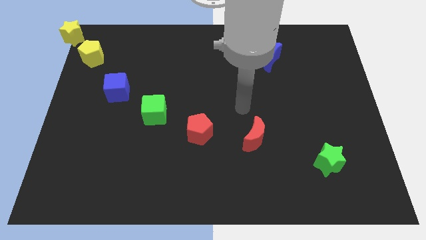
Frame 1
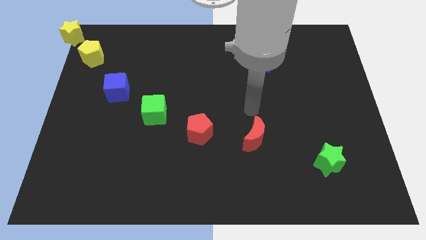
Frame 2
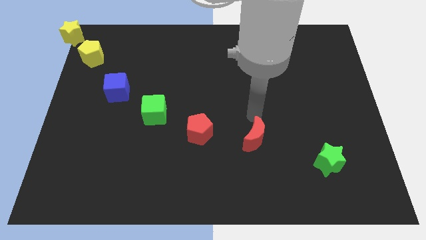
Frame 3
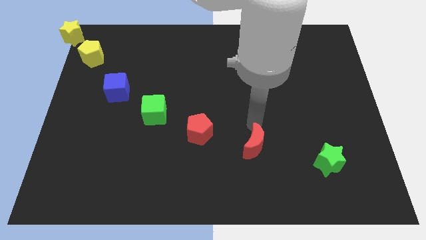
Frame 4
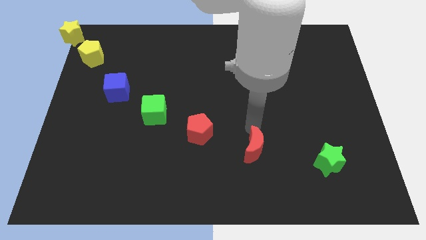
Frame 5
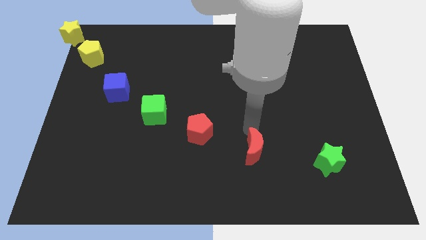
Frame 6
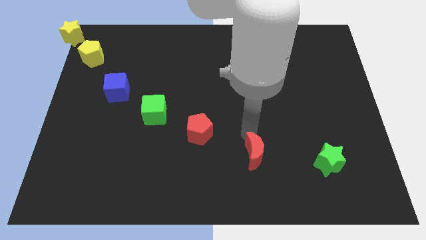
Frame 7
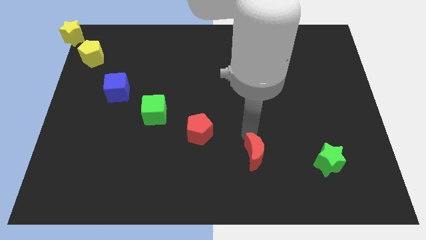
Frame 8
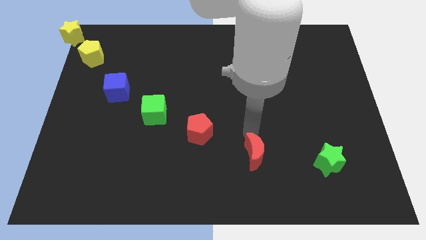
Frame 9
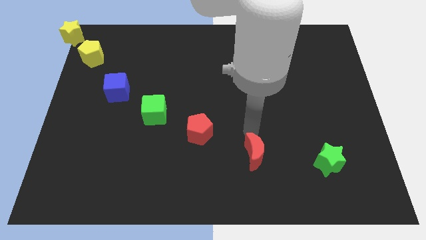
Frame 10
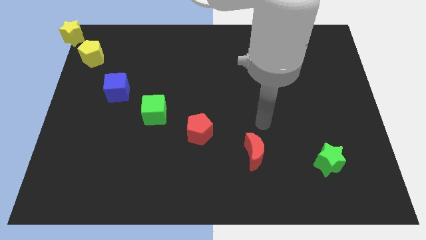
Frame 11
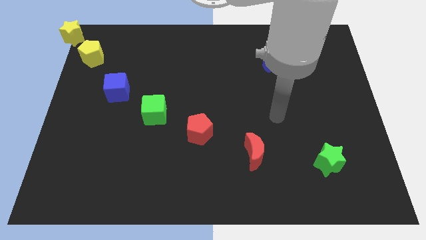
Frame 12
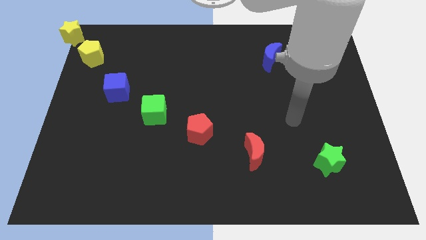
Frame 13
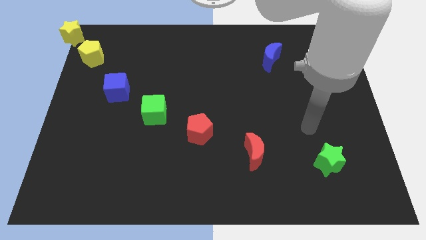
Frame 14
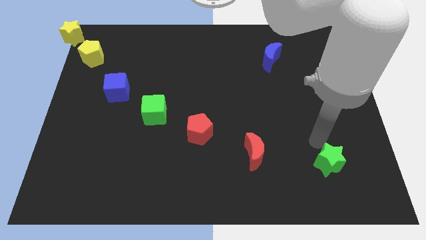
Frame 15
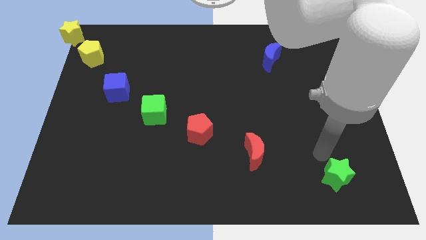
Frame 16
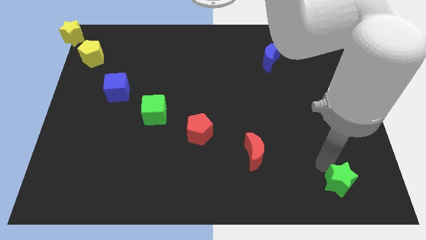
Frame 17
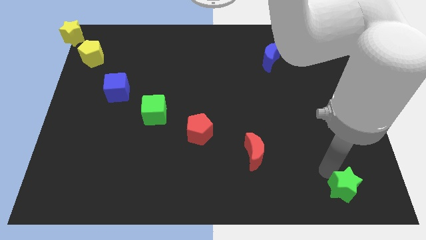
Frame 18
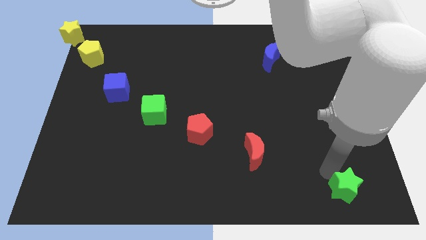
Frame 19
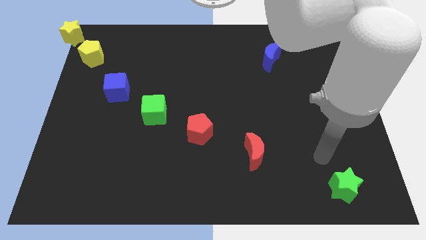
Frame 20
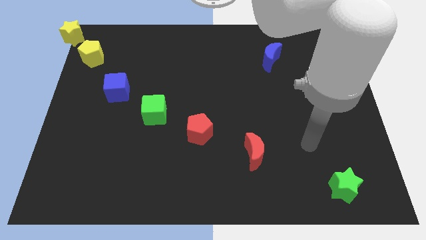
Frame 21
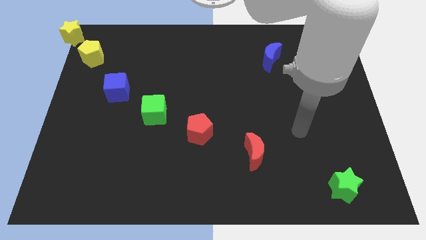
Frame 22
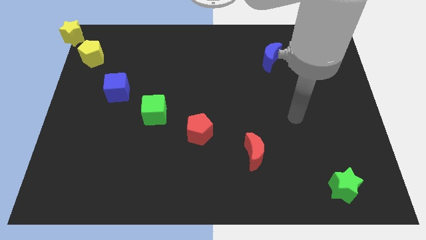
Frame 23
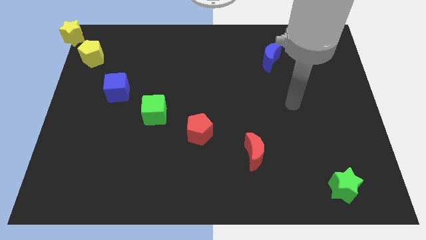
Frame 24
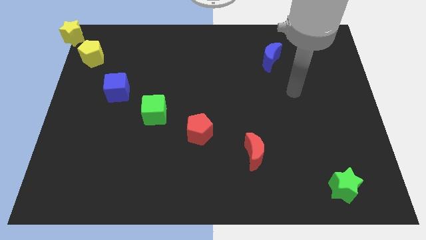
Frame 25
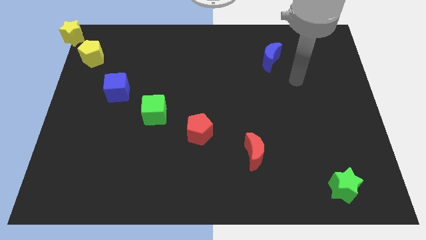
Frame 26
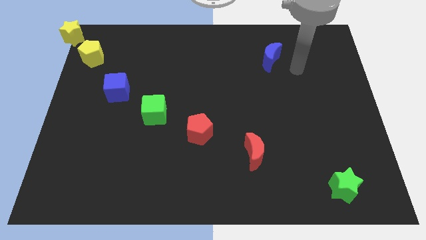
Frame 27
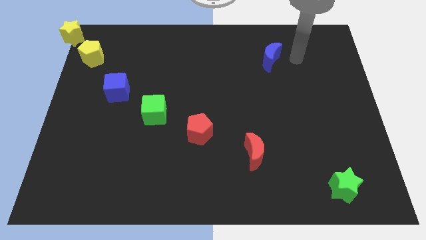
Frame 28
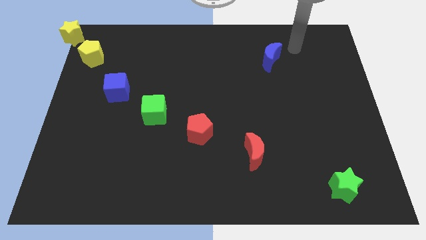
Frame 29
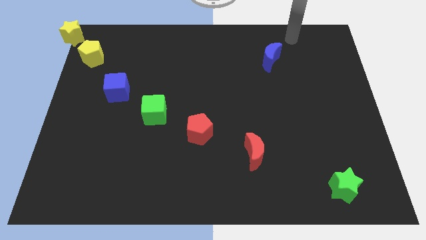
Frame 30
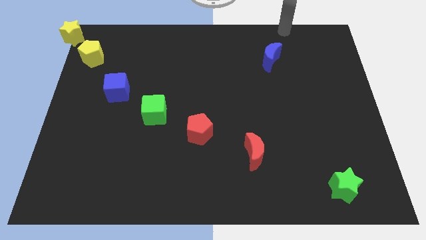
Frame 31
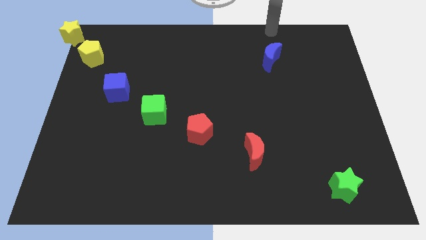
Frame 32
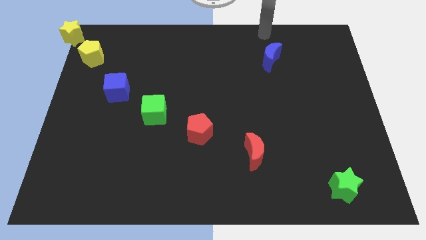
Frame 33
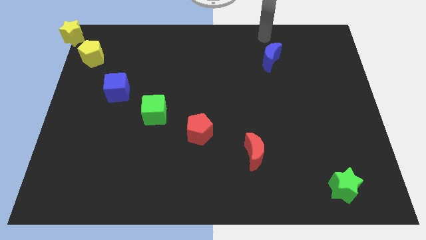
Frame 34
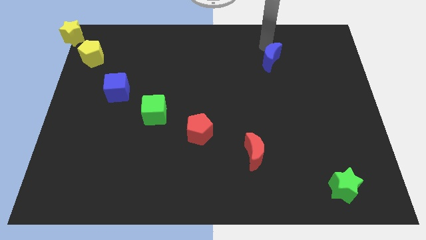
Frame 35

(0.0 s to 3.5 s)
place the red moon and green star diagonally to the red pentagon

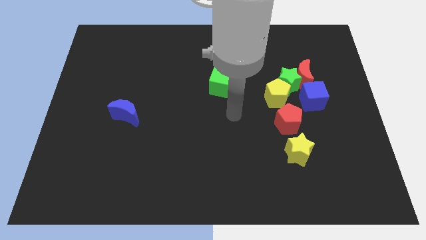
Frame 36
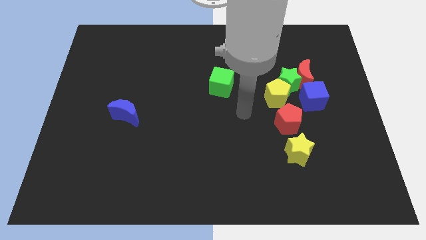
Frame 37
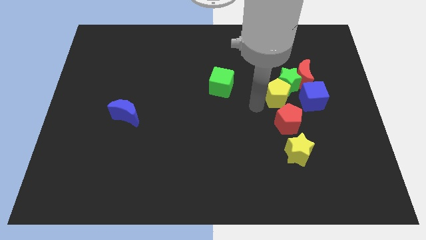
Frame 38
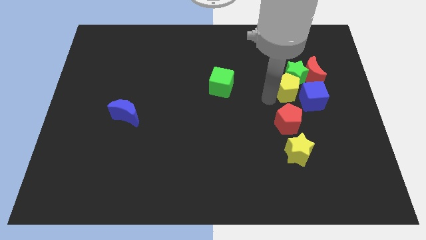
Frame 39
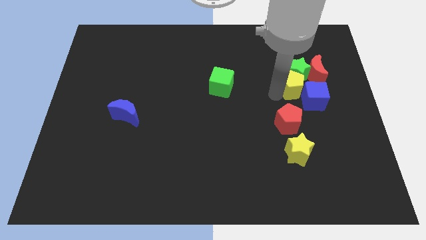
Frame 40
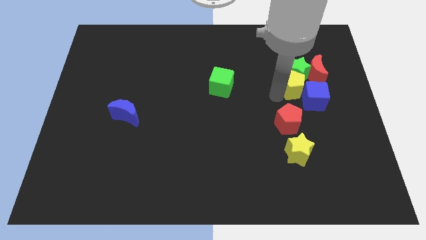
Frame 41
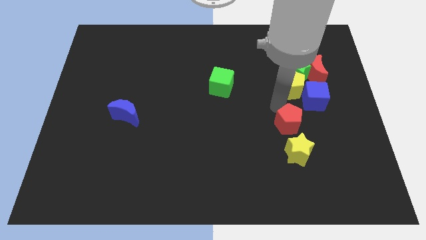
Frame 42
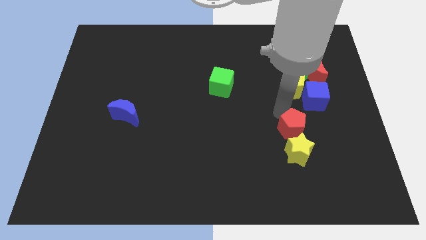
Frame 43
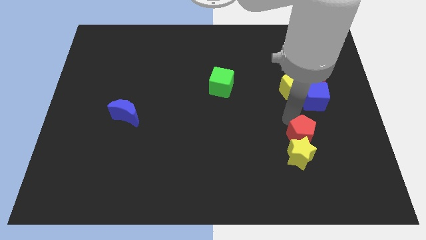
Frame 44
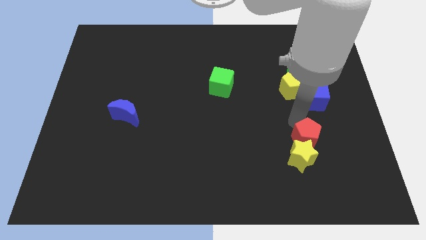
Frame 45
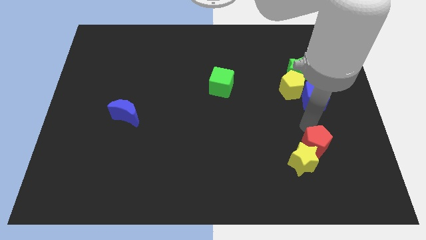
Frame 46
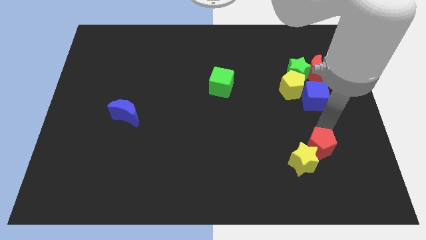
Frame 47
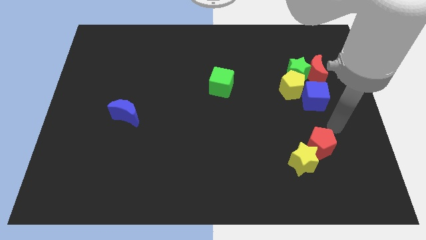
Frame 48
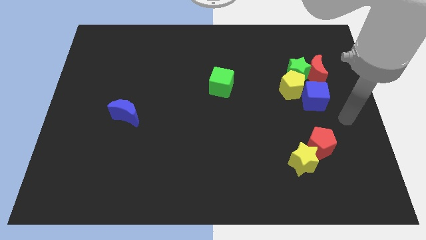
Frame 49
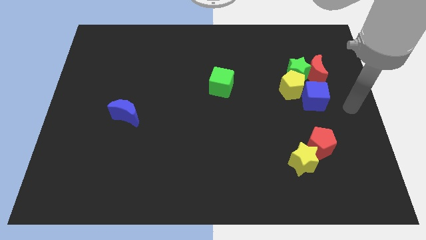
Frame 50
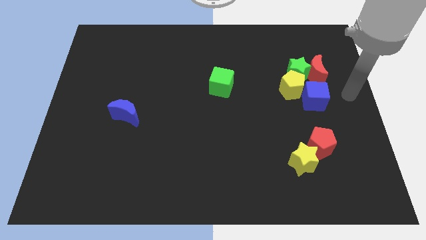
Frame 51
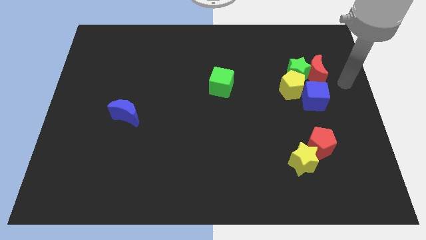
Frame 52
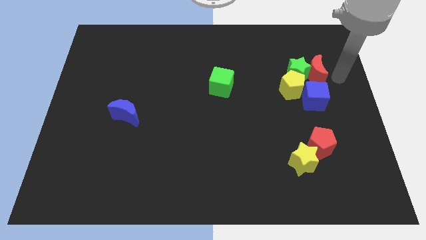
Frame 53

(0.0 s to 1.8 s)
push the red pentagon and the yellow star towards the bottom

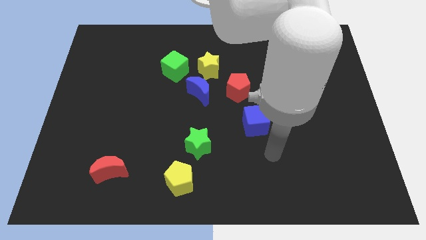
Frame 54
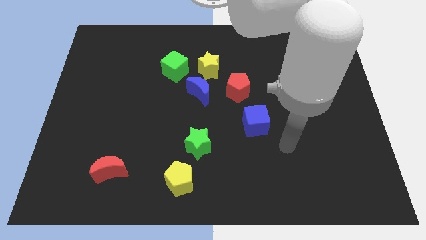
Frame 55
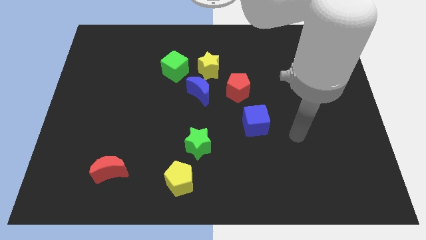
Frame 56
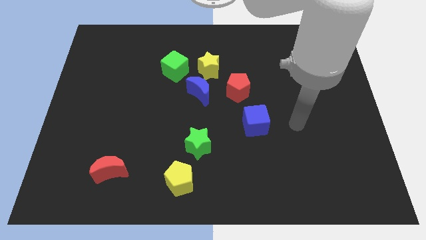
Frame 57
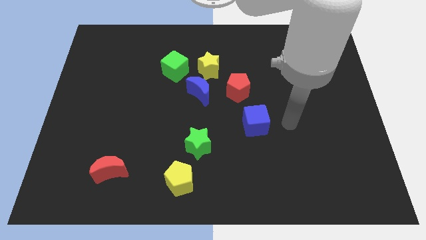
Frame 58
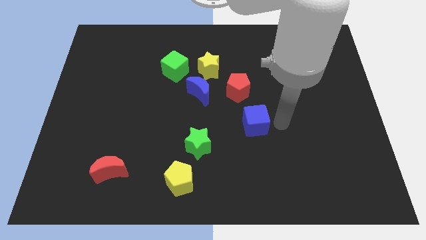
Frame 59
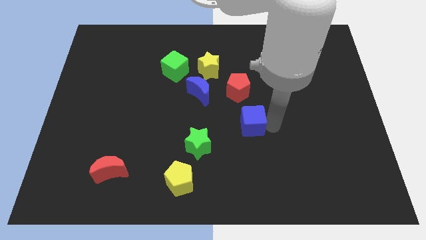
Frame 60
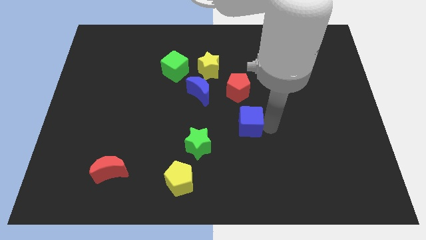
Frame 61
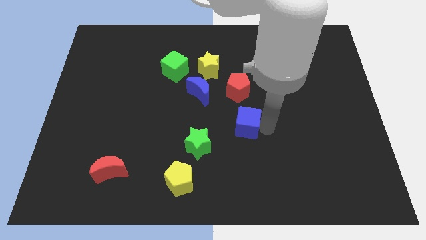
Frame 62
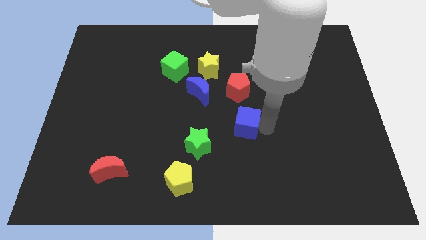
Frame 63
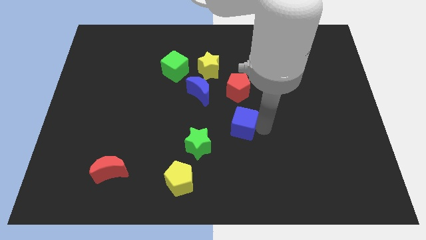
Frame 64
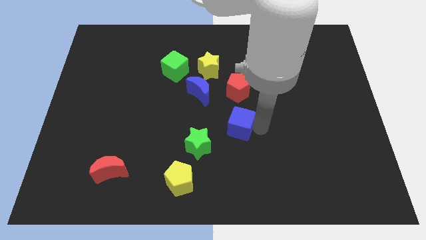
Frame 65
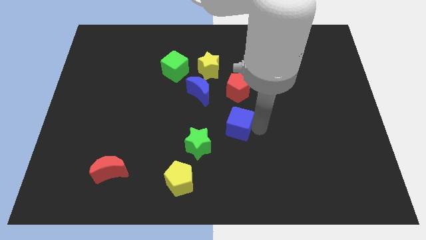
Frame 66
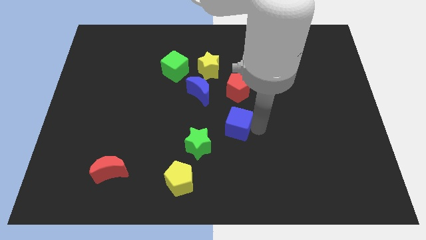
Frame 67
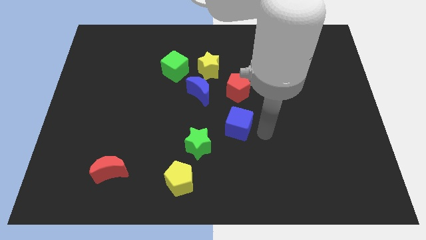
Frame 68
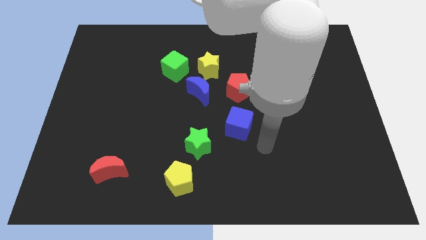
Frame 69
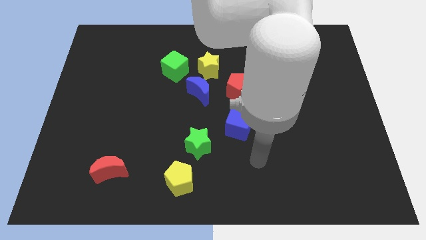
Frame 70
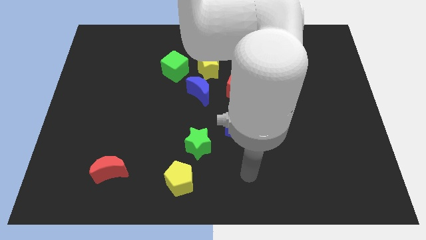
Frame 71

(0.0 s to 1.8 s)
push the blue cube slightly towards the green star

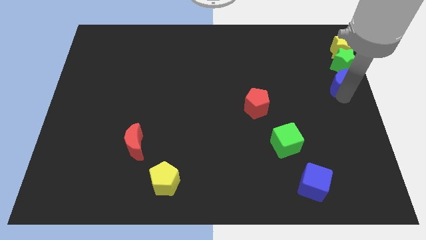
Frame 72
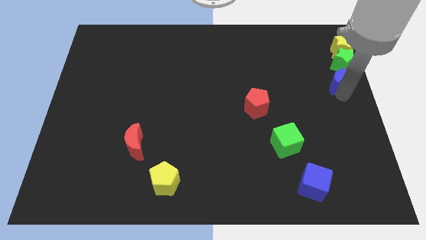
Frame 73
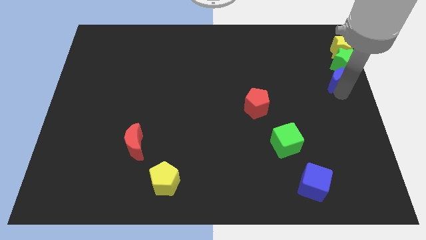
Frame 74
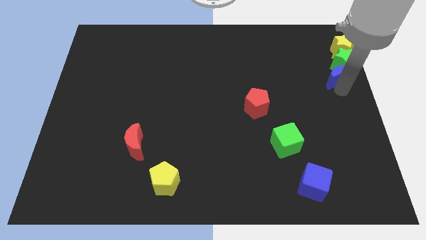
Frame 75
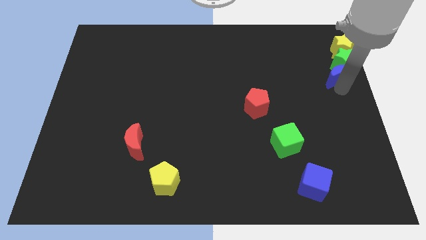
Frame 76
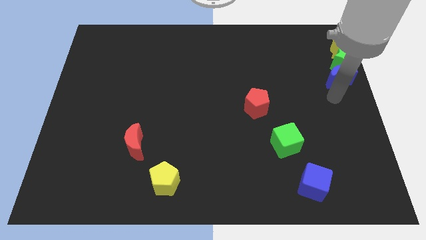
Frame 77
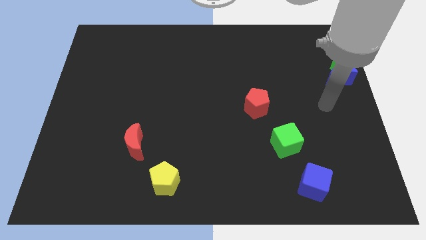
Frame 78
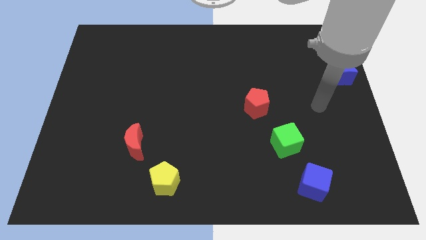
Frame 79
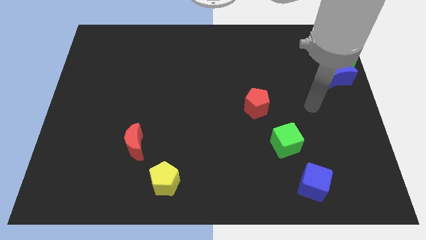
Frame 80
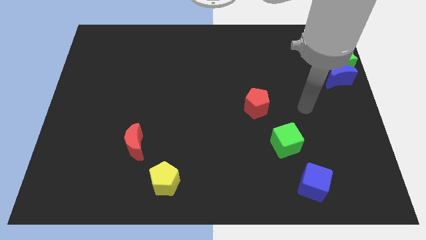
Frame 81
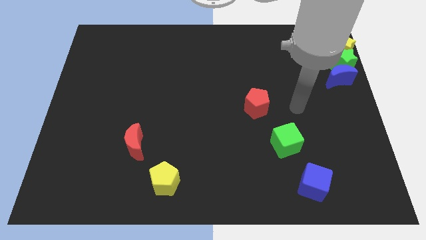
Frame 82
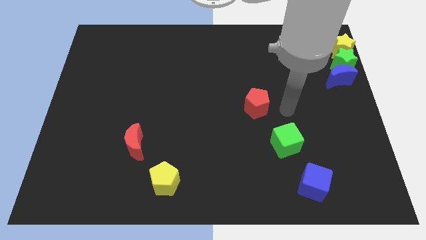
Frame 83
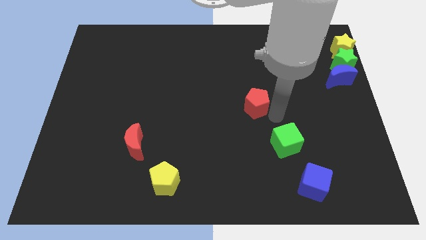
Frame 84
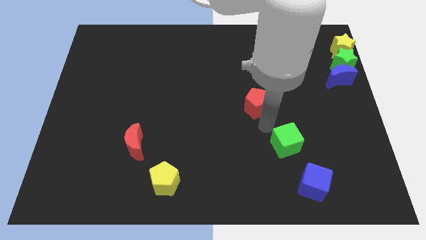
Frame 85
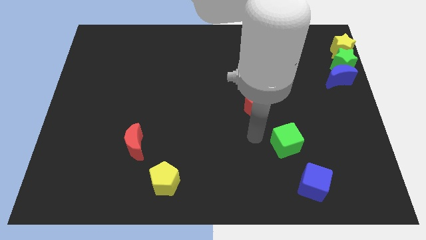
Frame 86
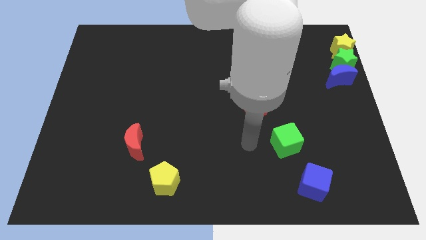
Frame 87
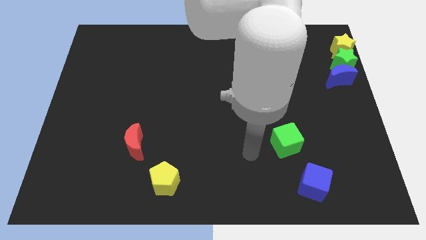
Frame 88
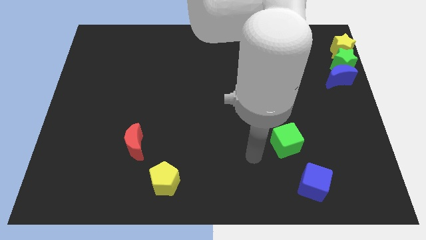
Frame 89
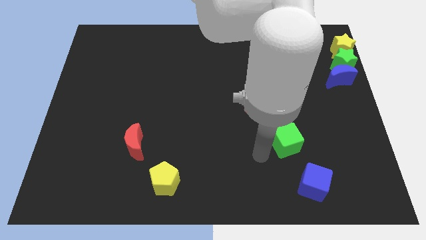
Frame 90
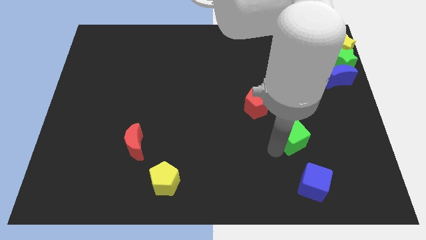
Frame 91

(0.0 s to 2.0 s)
place your arm at the left side of the green cube

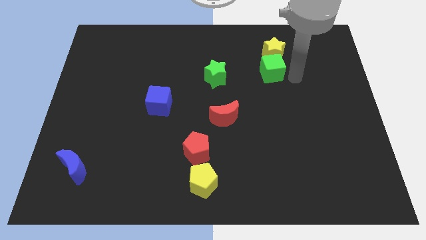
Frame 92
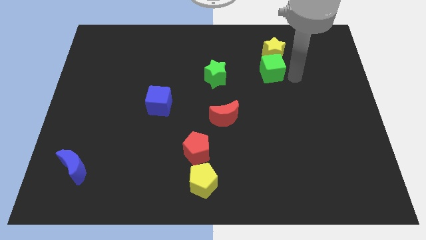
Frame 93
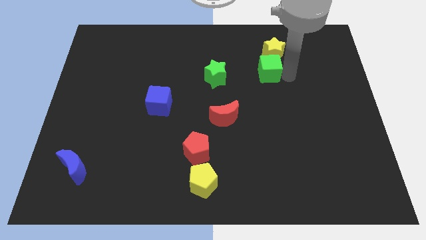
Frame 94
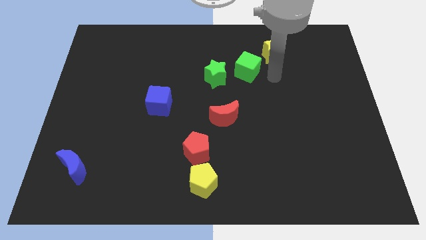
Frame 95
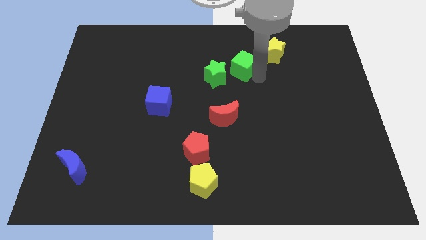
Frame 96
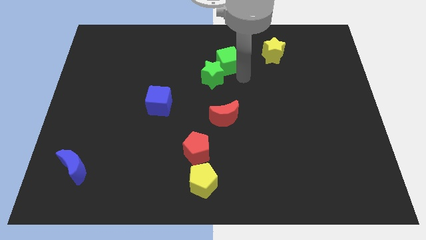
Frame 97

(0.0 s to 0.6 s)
move the green cube to the top center of the board
